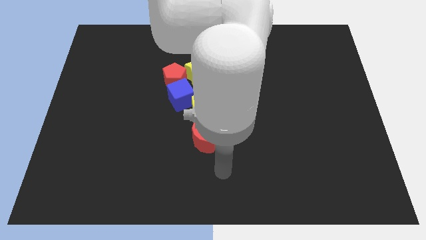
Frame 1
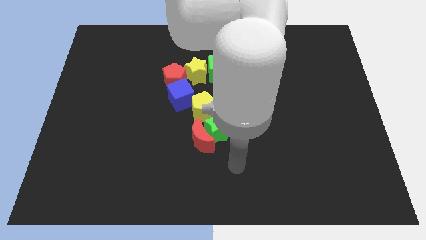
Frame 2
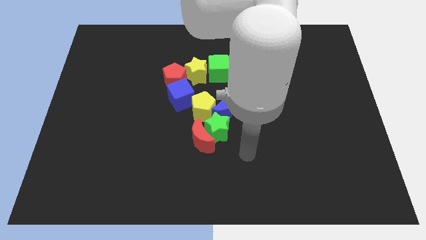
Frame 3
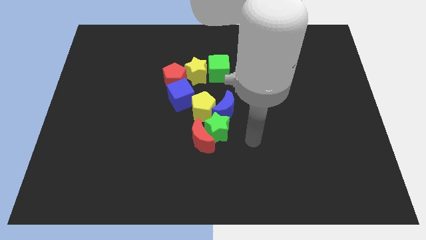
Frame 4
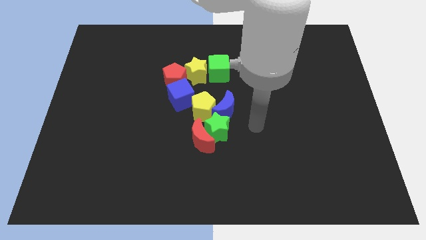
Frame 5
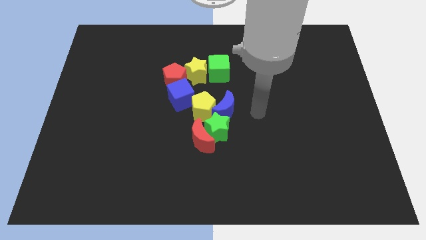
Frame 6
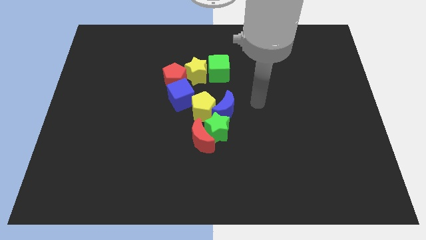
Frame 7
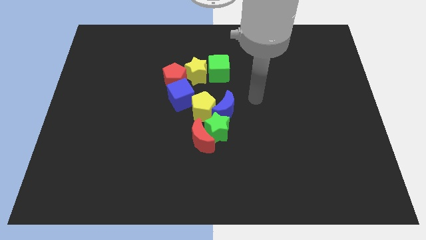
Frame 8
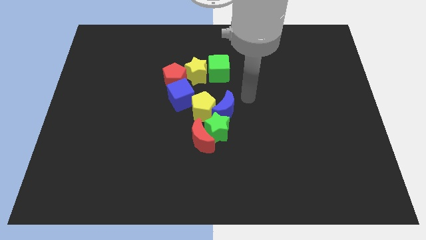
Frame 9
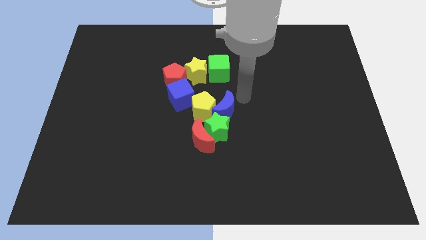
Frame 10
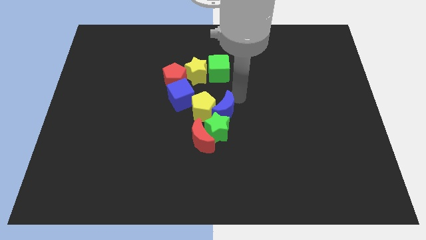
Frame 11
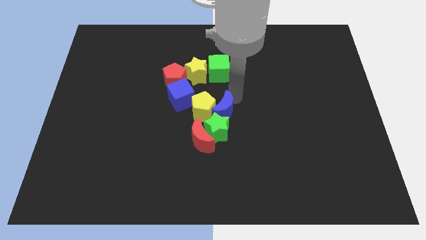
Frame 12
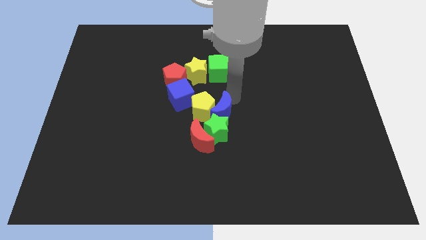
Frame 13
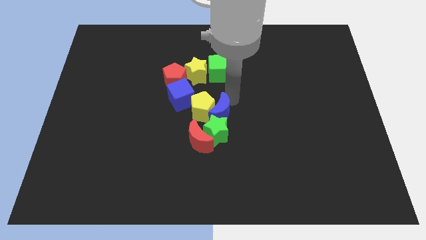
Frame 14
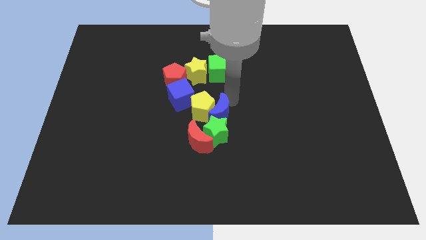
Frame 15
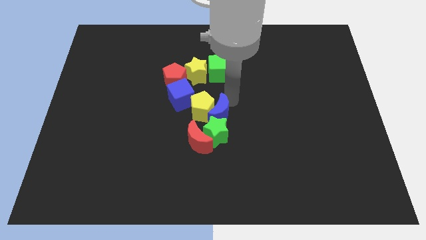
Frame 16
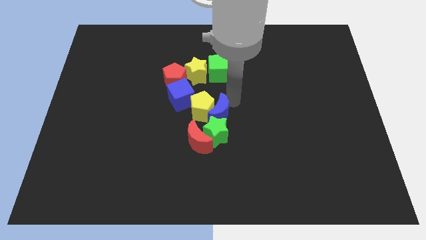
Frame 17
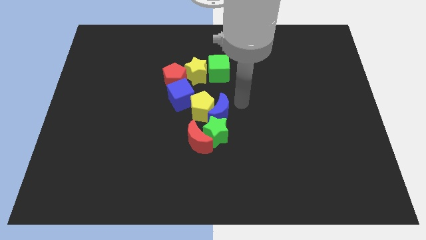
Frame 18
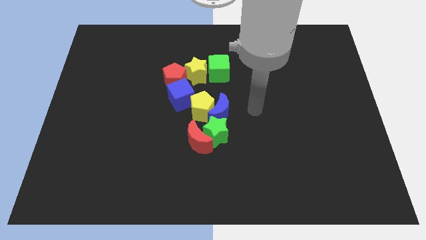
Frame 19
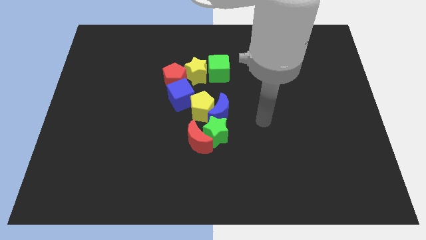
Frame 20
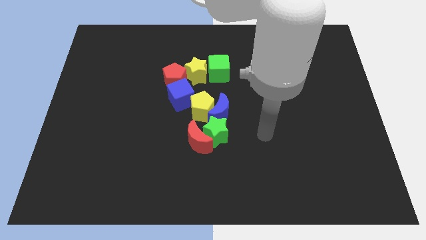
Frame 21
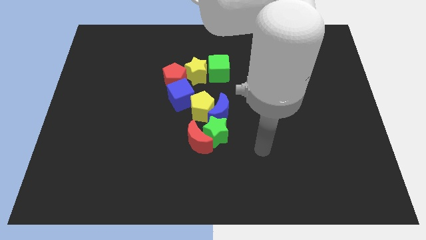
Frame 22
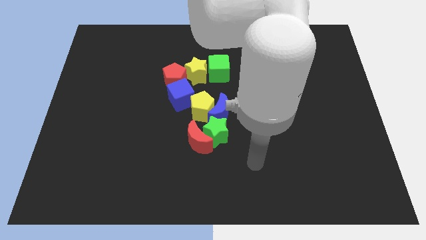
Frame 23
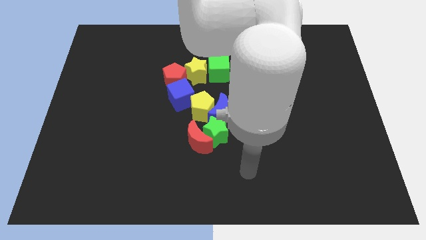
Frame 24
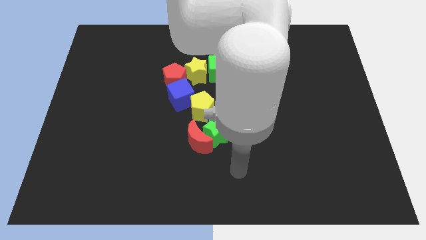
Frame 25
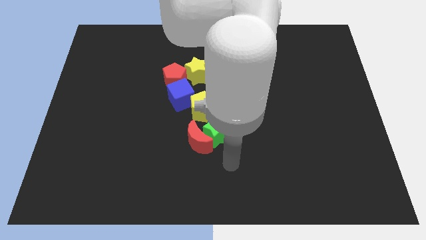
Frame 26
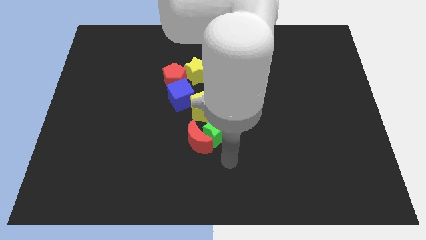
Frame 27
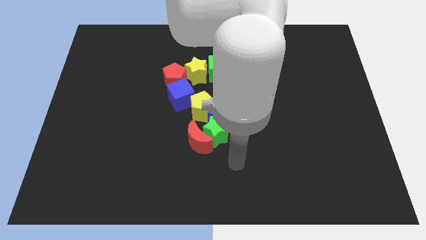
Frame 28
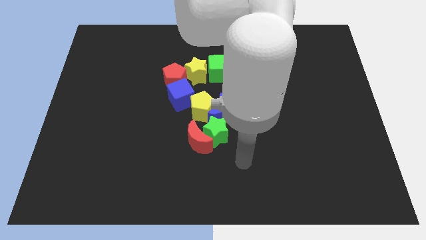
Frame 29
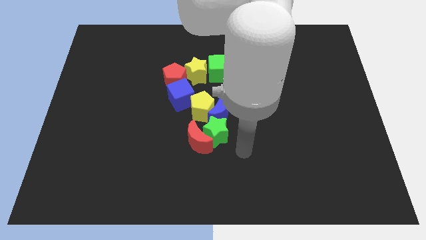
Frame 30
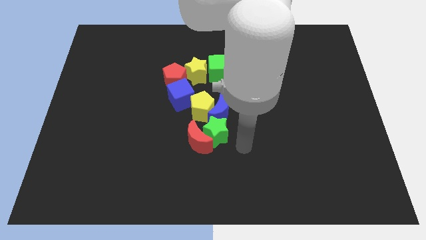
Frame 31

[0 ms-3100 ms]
move the blue crescent into the yellow pentagon

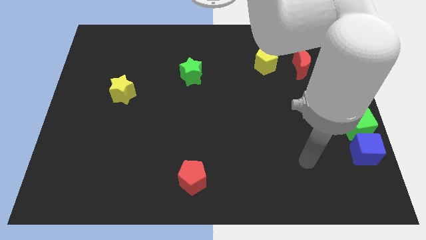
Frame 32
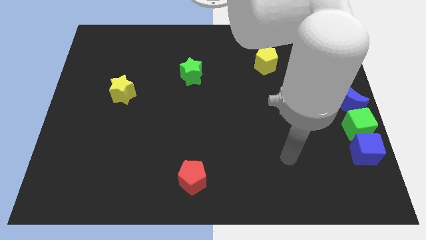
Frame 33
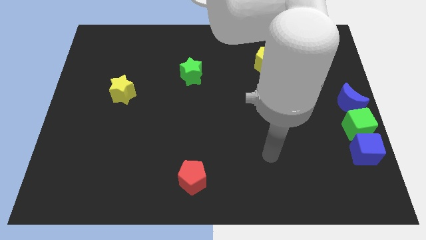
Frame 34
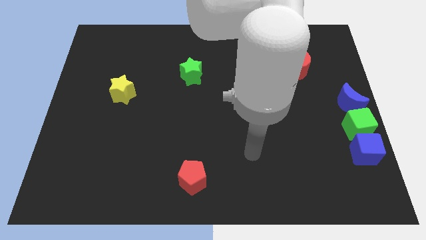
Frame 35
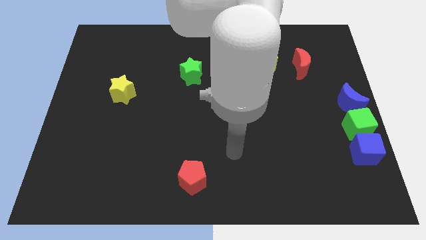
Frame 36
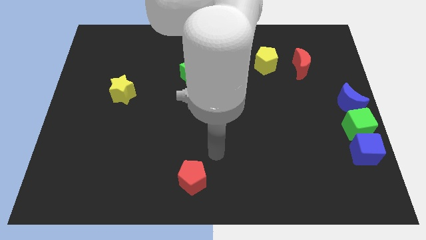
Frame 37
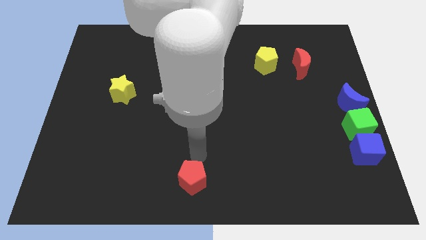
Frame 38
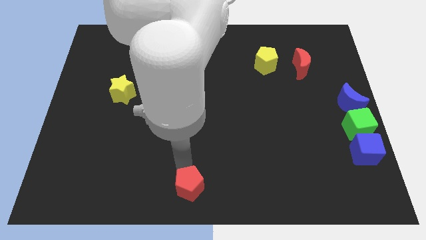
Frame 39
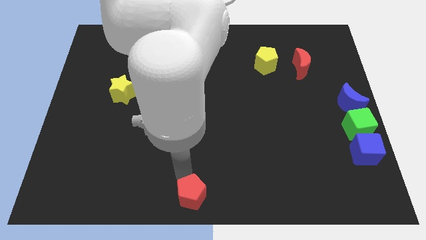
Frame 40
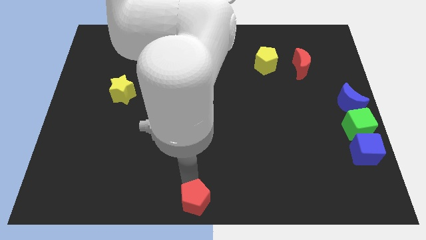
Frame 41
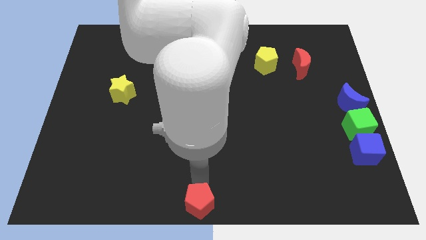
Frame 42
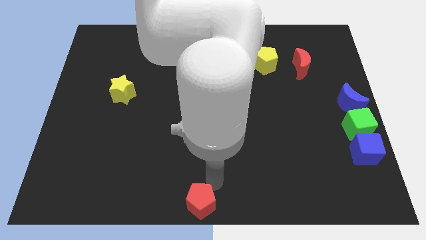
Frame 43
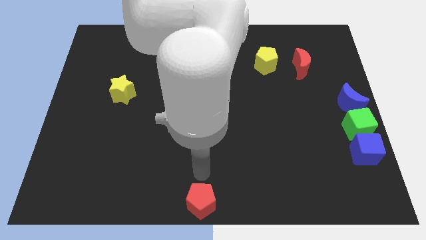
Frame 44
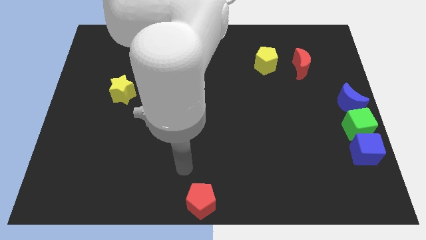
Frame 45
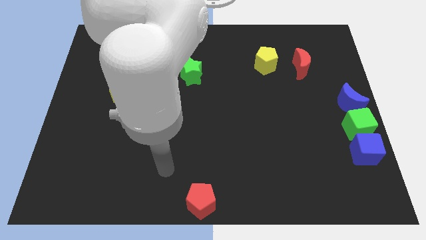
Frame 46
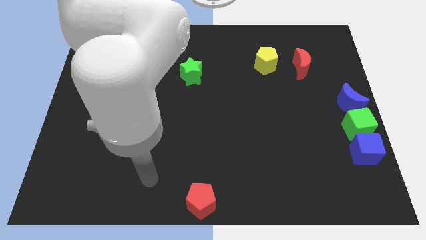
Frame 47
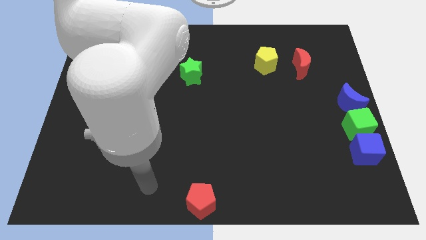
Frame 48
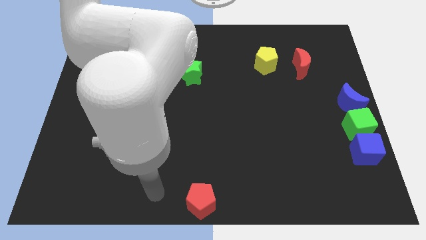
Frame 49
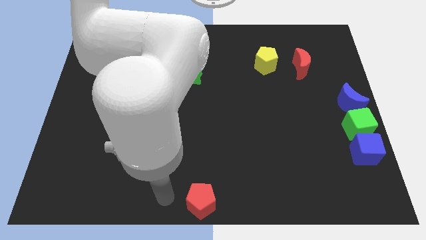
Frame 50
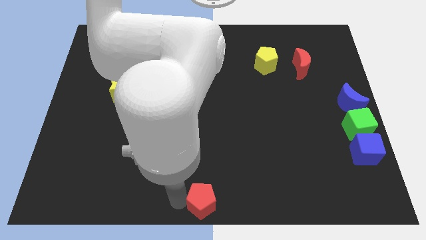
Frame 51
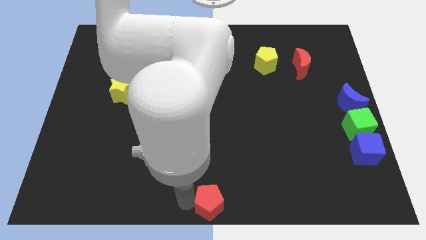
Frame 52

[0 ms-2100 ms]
push red pentagon to the bottom center

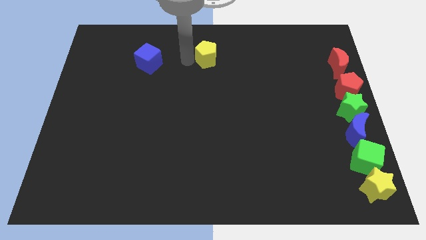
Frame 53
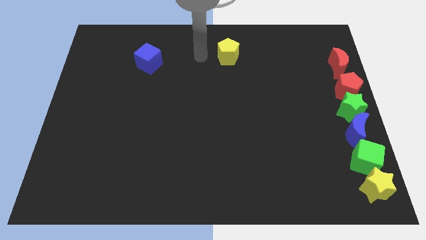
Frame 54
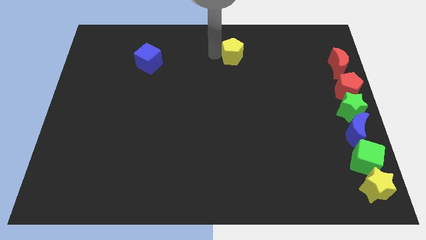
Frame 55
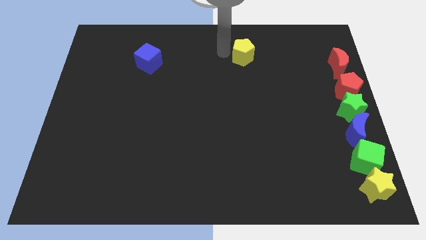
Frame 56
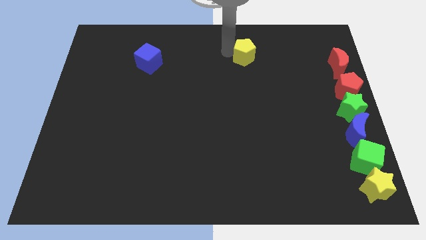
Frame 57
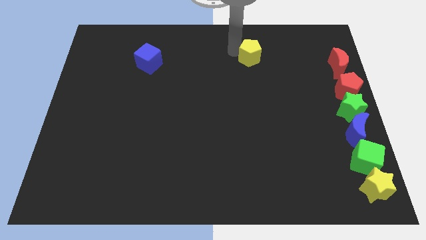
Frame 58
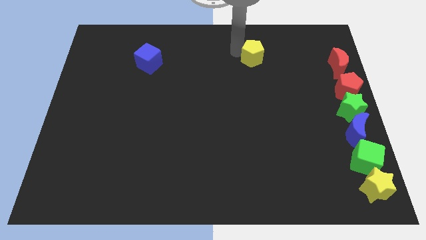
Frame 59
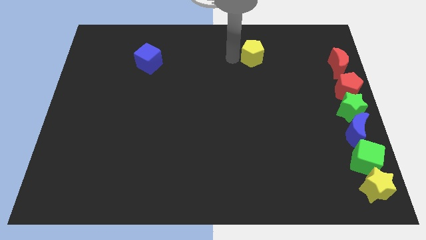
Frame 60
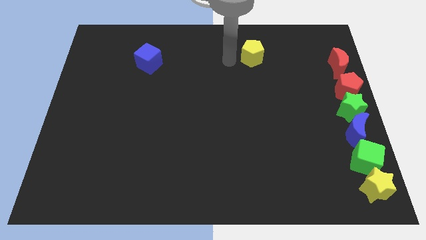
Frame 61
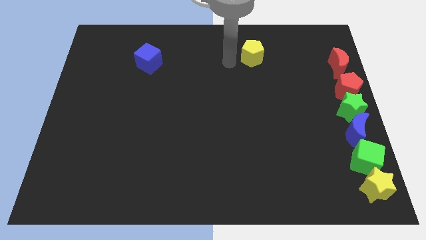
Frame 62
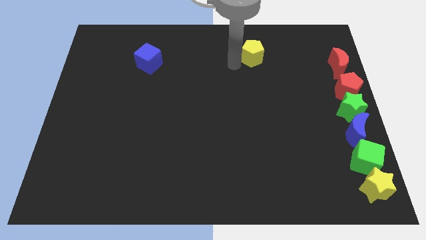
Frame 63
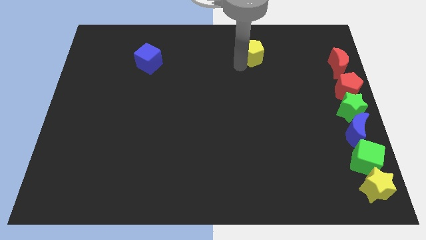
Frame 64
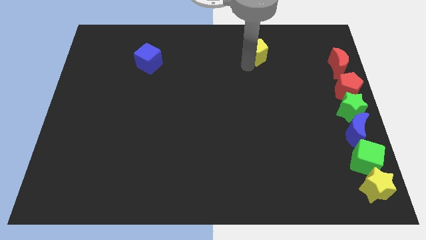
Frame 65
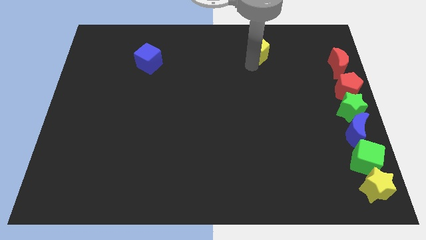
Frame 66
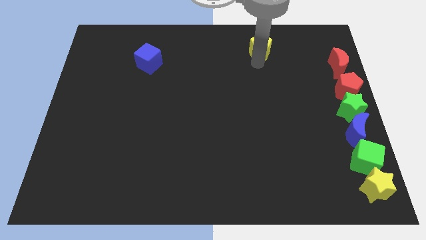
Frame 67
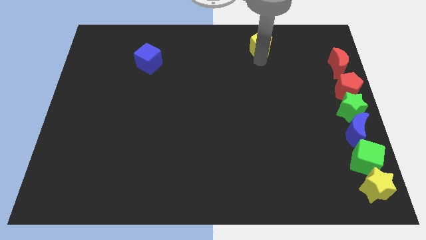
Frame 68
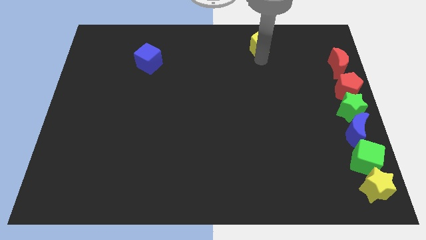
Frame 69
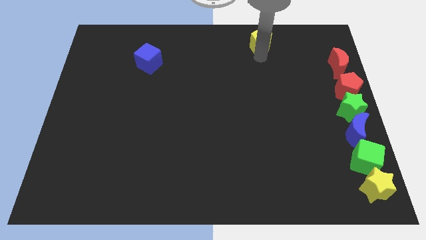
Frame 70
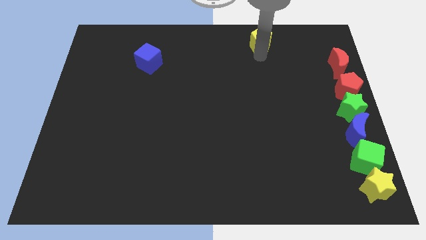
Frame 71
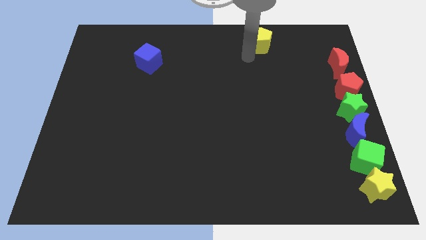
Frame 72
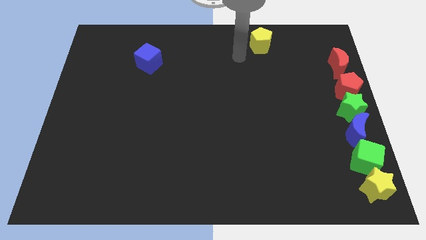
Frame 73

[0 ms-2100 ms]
move yellow pentagon to the right

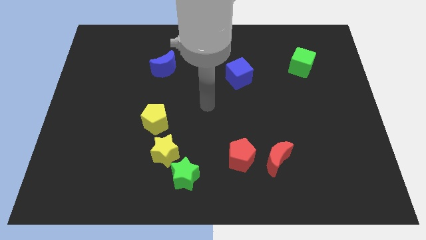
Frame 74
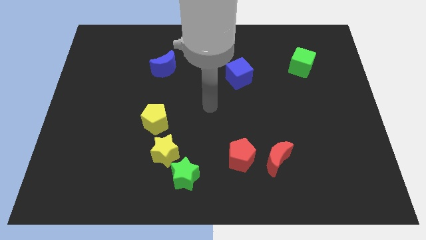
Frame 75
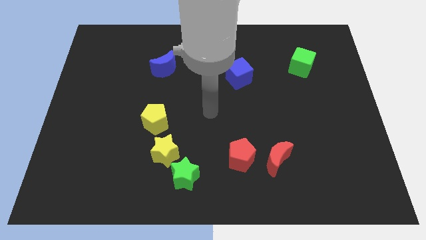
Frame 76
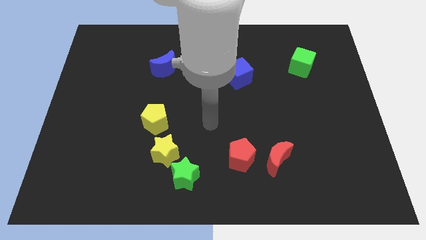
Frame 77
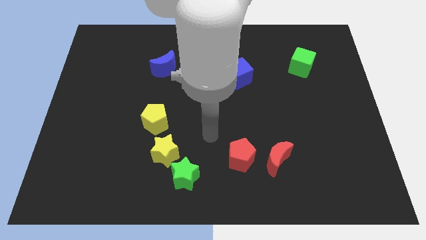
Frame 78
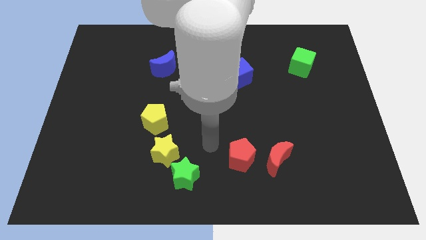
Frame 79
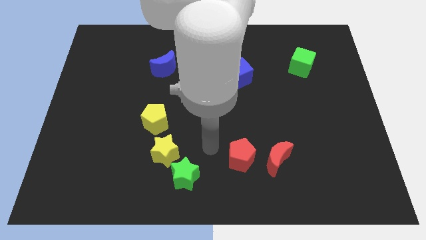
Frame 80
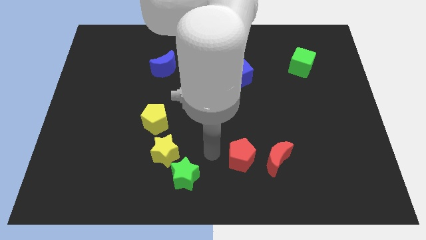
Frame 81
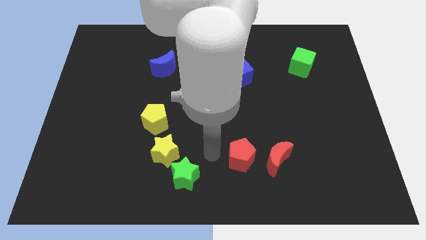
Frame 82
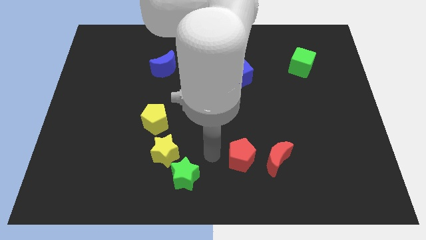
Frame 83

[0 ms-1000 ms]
point your hand at the left side of the red pentagon

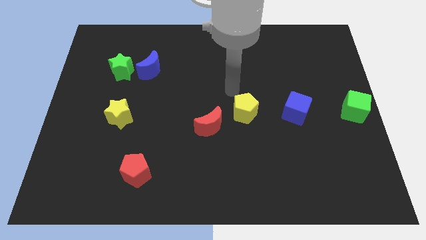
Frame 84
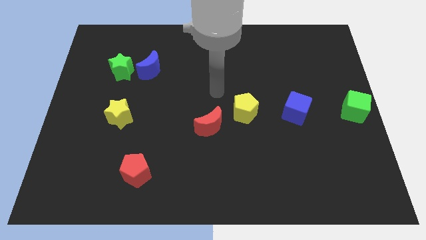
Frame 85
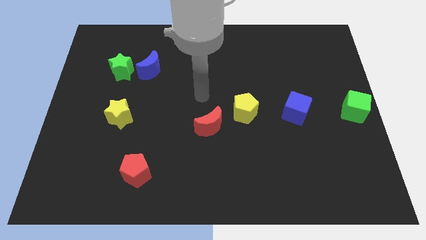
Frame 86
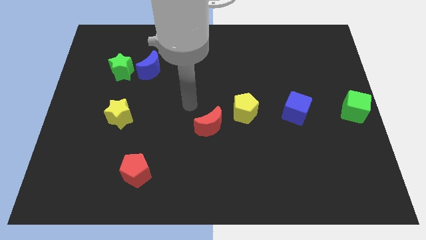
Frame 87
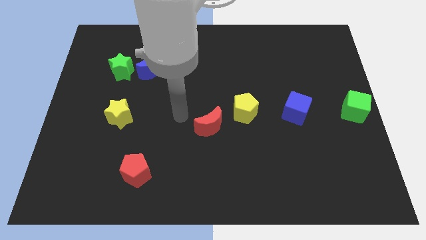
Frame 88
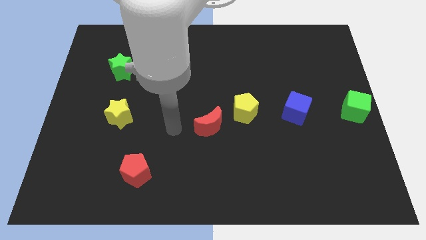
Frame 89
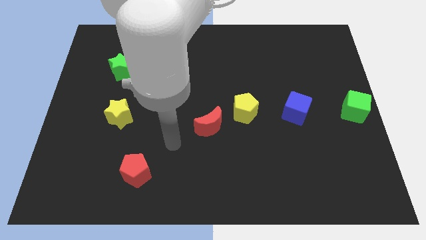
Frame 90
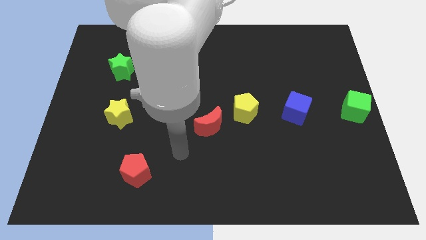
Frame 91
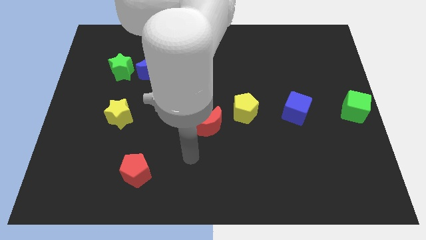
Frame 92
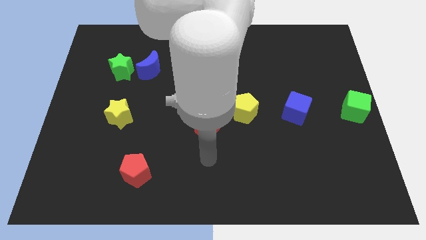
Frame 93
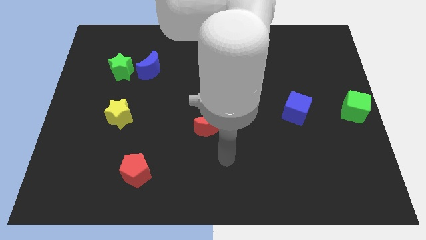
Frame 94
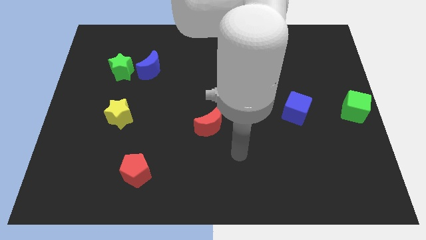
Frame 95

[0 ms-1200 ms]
place your arm to the bottom of the yellow pentagon
